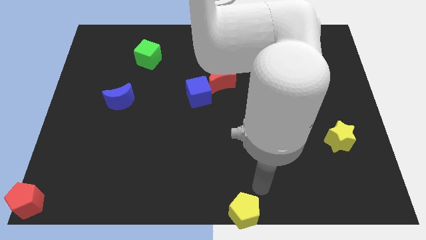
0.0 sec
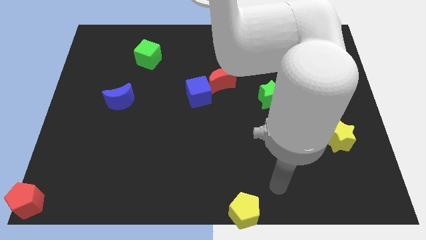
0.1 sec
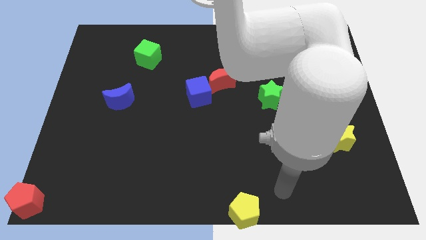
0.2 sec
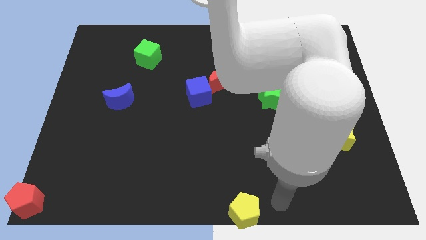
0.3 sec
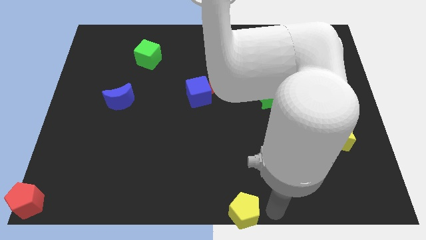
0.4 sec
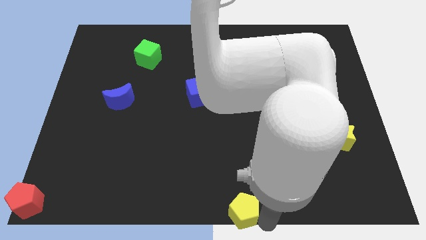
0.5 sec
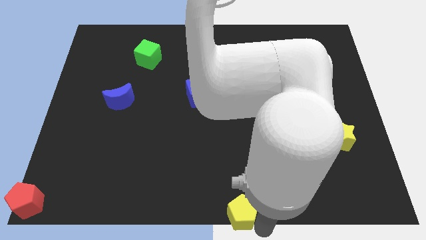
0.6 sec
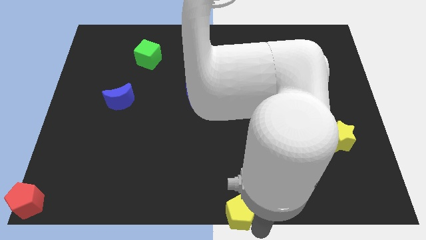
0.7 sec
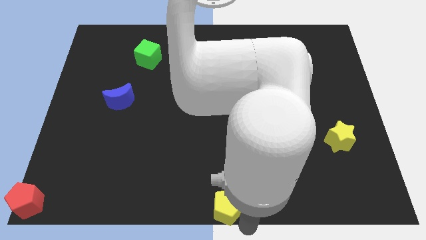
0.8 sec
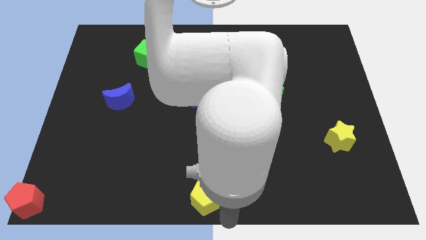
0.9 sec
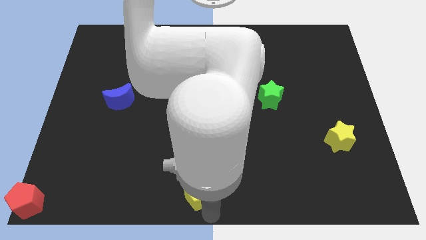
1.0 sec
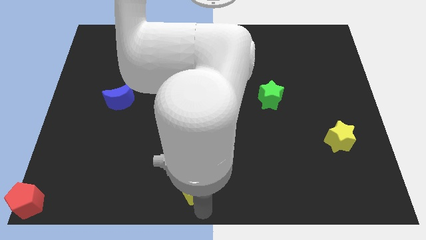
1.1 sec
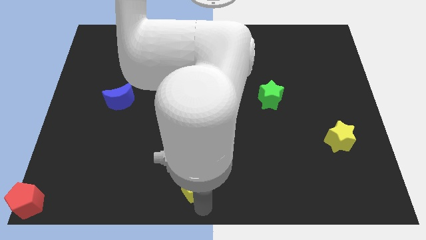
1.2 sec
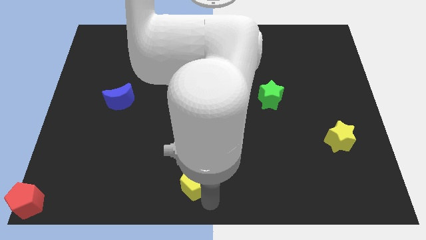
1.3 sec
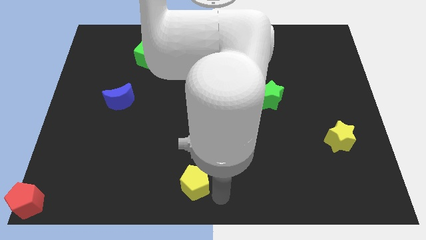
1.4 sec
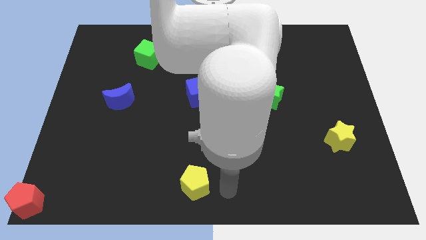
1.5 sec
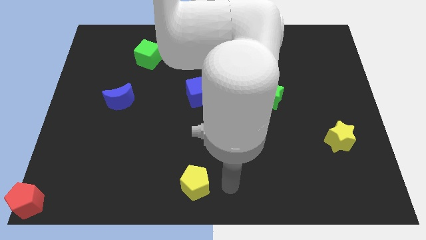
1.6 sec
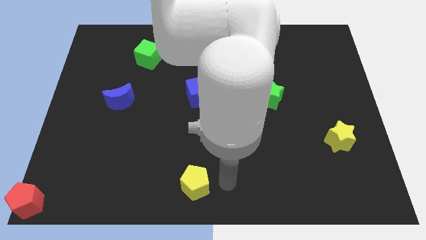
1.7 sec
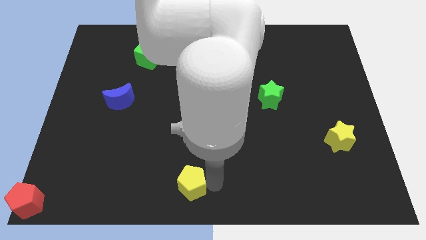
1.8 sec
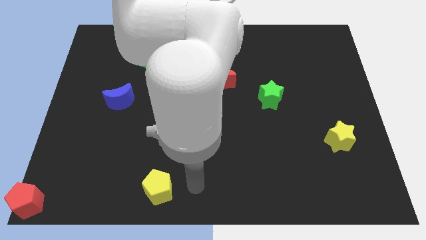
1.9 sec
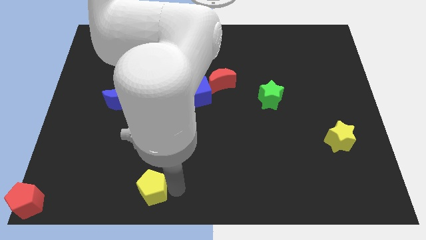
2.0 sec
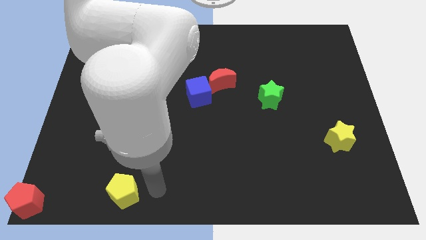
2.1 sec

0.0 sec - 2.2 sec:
move away yellow pentagon from the bottom center

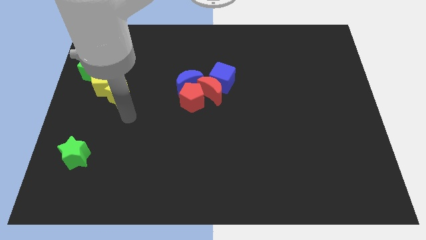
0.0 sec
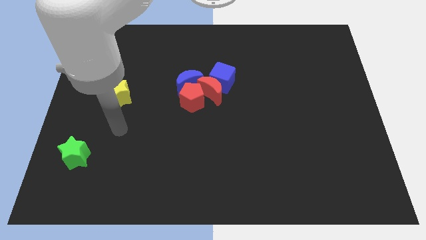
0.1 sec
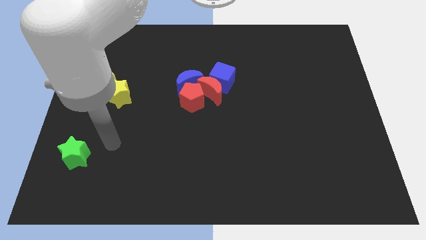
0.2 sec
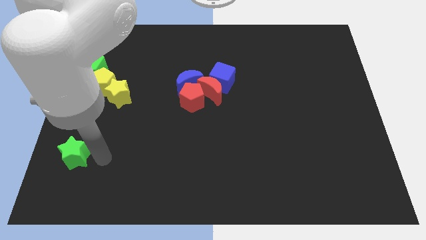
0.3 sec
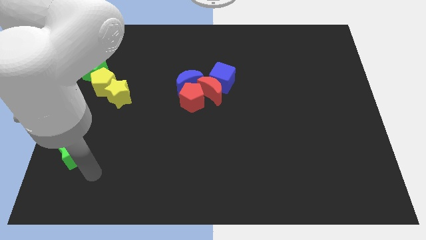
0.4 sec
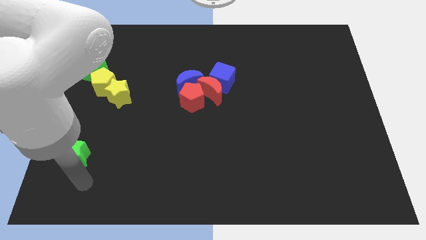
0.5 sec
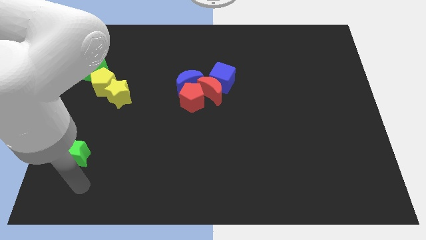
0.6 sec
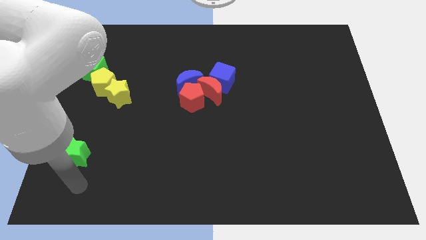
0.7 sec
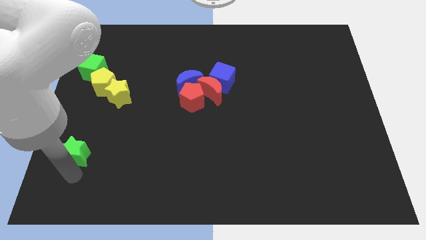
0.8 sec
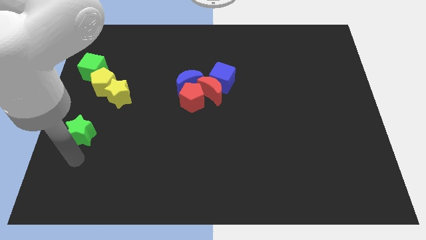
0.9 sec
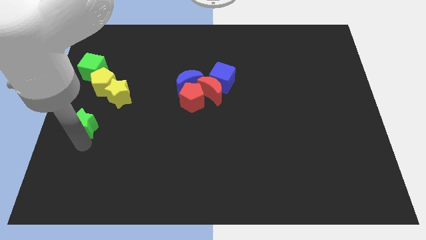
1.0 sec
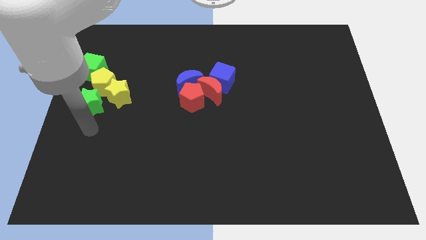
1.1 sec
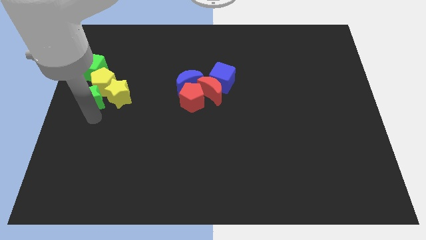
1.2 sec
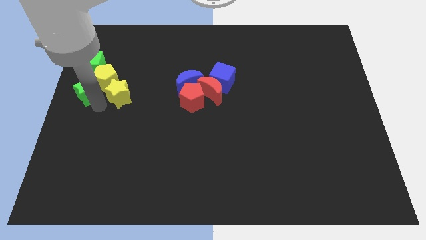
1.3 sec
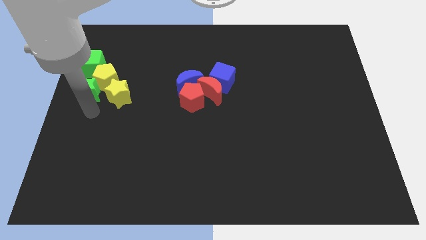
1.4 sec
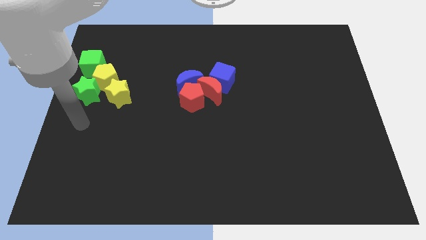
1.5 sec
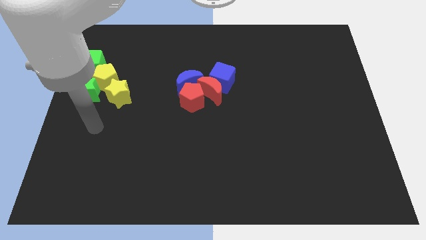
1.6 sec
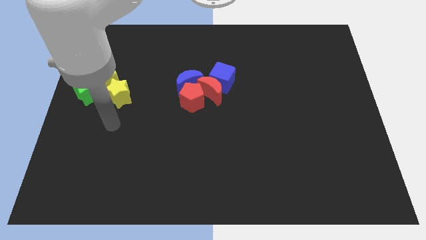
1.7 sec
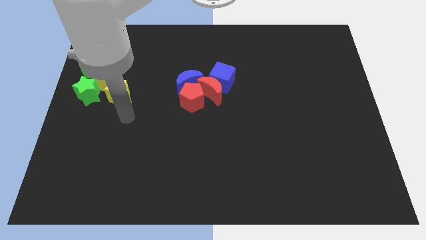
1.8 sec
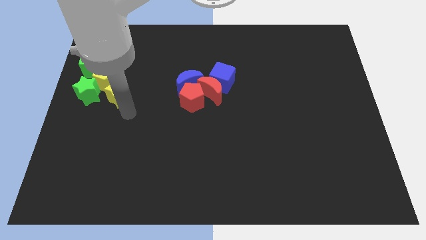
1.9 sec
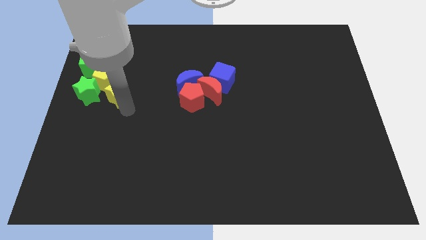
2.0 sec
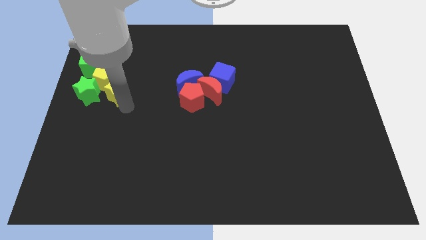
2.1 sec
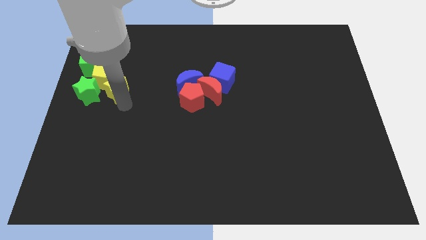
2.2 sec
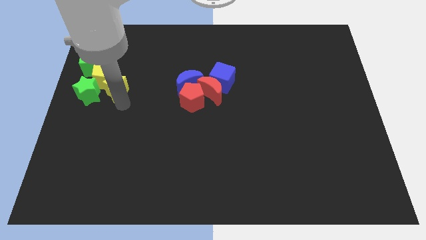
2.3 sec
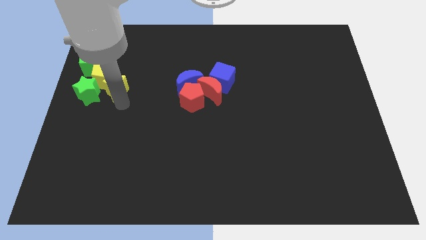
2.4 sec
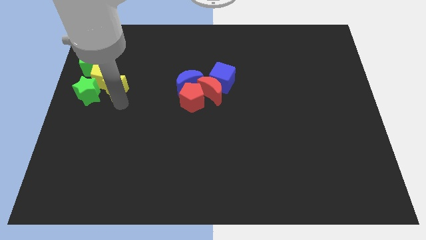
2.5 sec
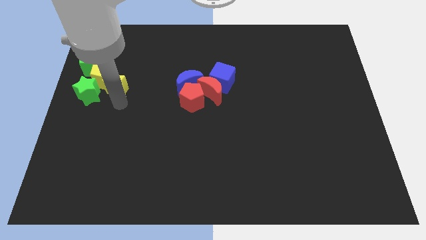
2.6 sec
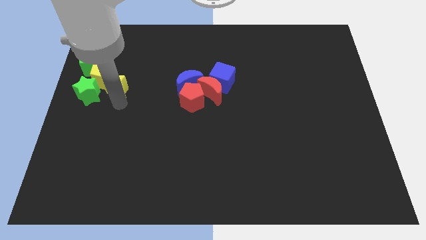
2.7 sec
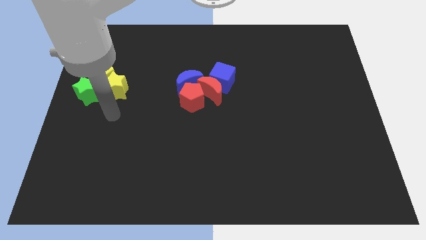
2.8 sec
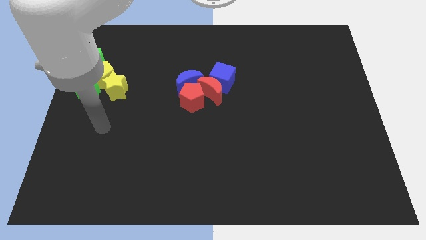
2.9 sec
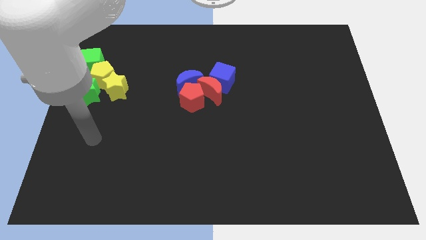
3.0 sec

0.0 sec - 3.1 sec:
push the green star and the yellow star into the yellow pentagon

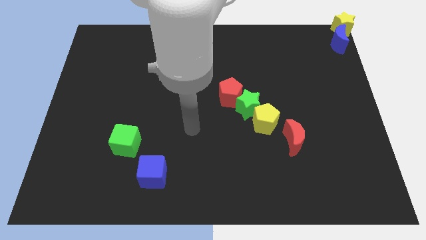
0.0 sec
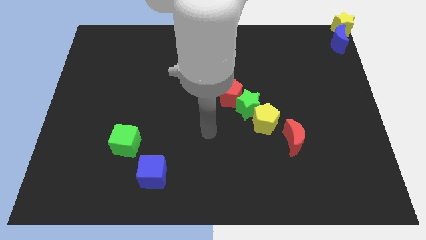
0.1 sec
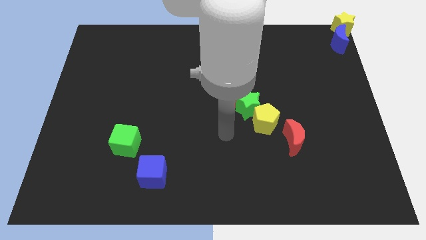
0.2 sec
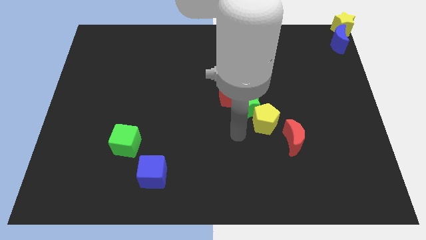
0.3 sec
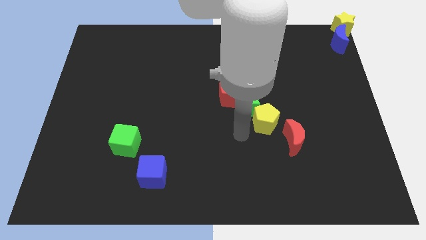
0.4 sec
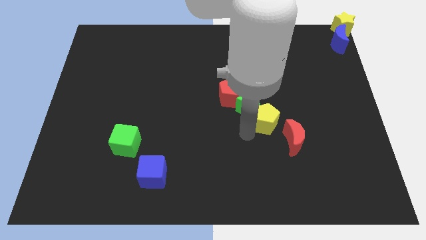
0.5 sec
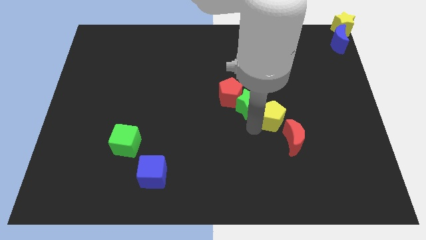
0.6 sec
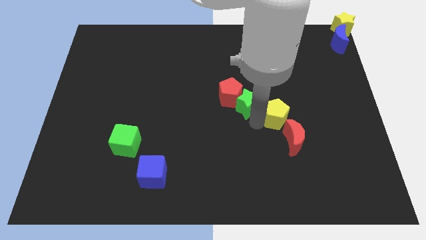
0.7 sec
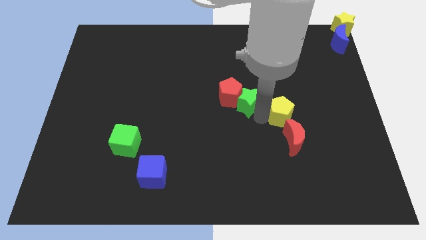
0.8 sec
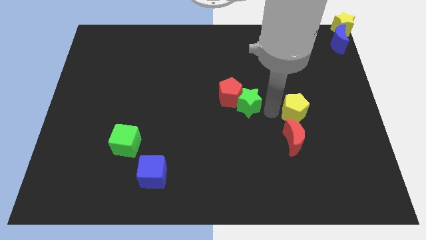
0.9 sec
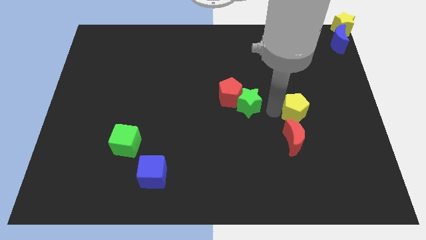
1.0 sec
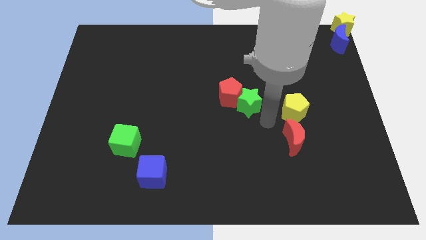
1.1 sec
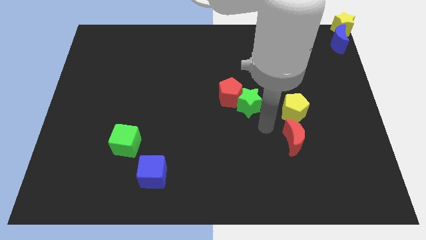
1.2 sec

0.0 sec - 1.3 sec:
move the yellow pentagon to the top of the red crescent

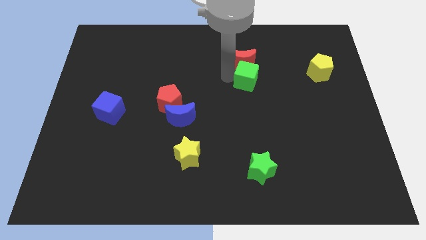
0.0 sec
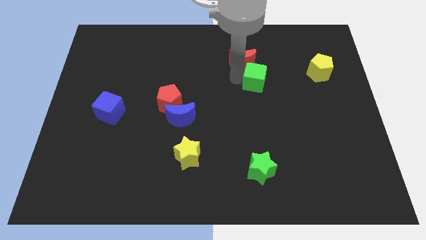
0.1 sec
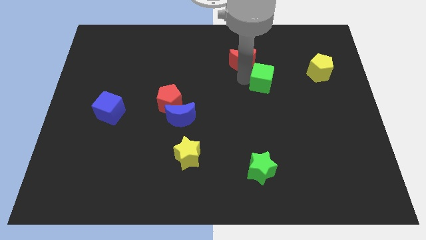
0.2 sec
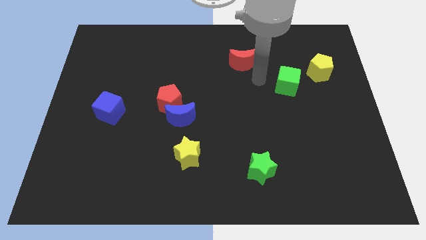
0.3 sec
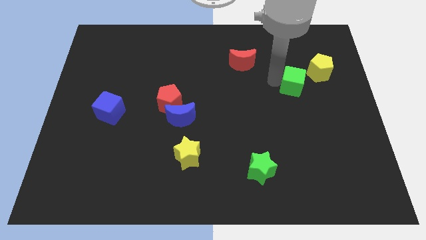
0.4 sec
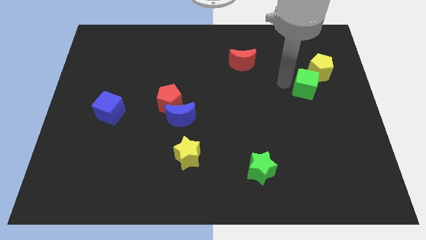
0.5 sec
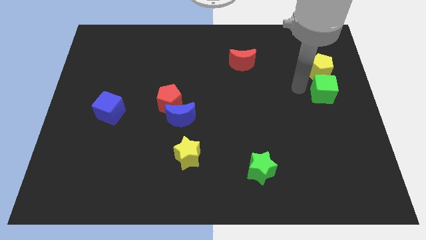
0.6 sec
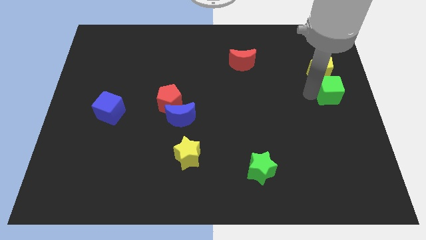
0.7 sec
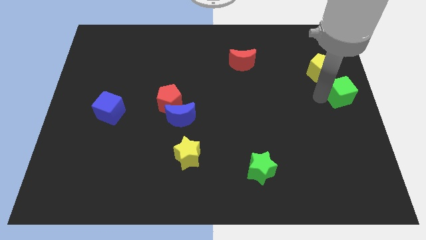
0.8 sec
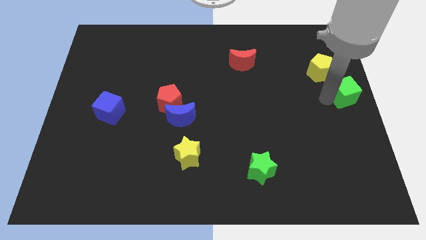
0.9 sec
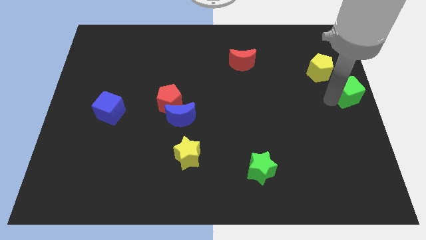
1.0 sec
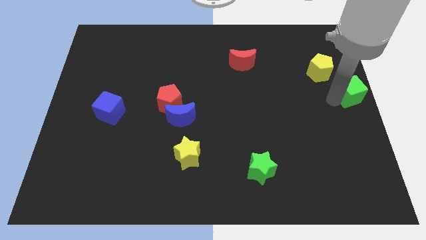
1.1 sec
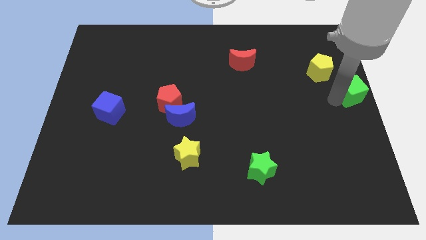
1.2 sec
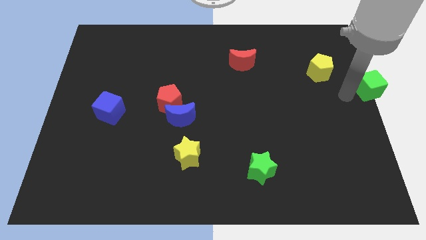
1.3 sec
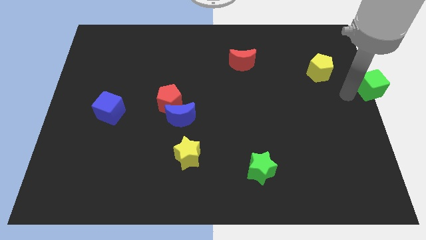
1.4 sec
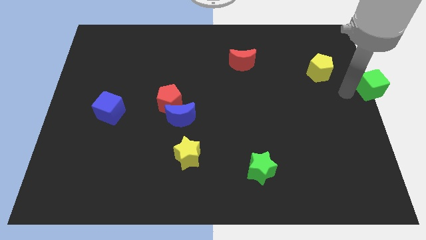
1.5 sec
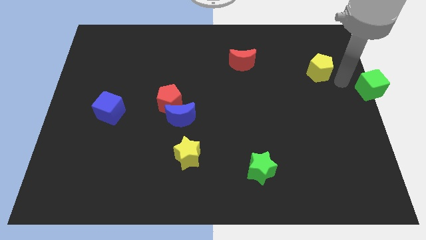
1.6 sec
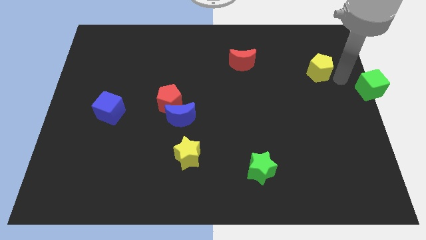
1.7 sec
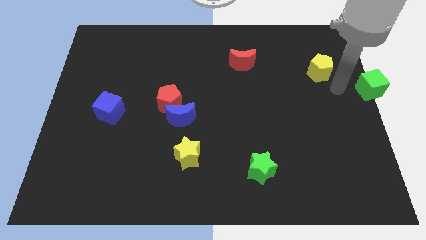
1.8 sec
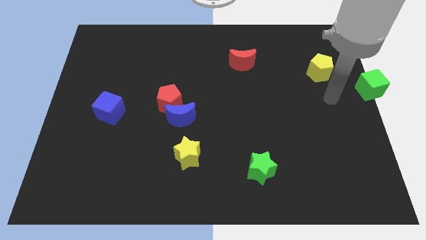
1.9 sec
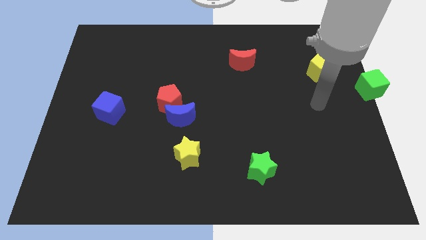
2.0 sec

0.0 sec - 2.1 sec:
slide green cube at the center right

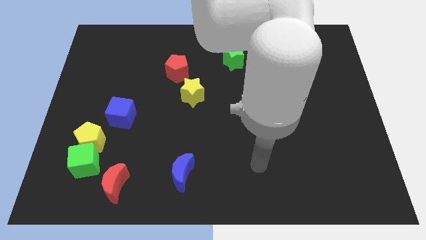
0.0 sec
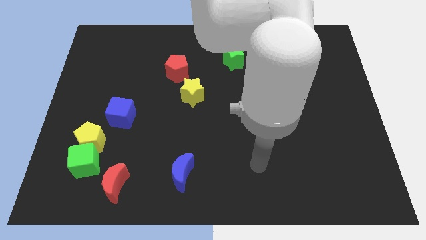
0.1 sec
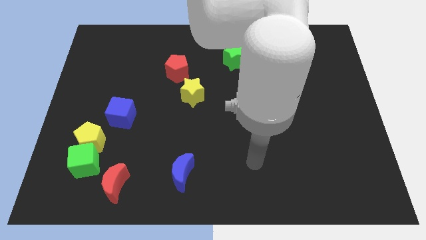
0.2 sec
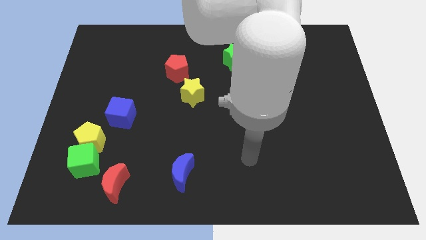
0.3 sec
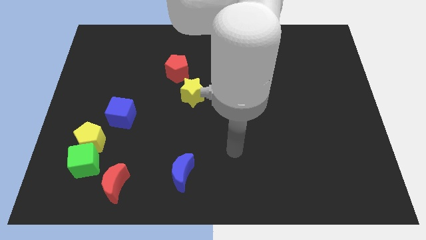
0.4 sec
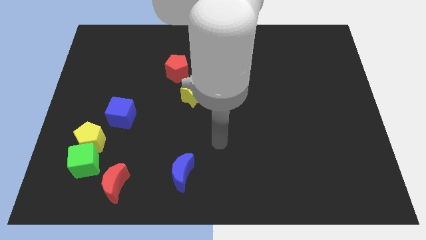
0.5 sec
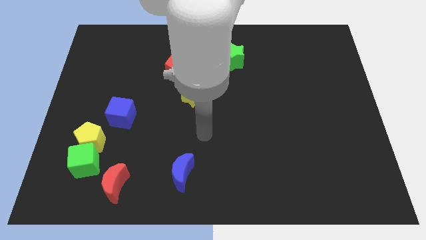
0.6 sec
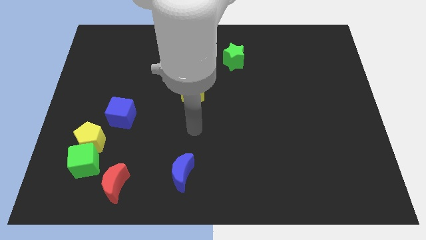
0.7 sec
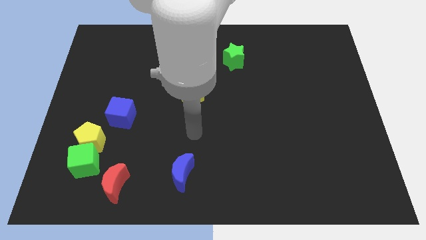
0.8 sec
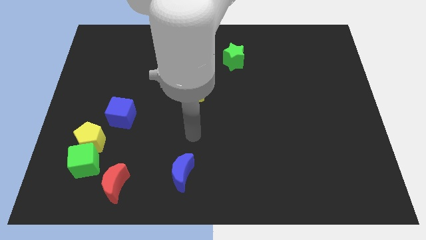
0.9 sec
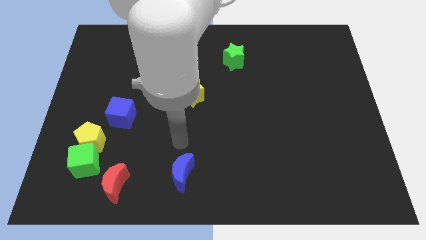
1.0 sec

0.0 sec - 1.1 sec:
point your arm at the top of the blue crescent
